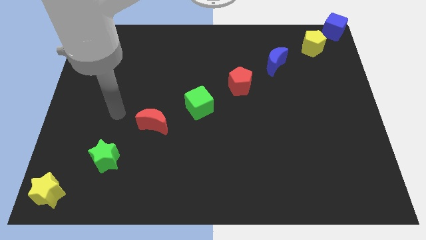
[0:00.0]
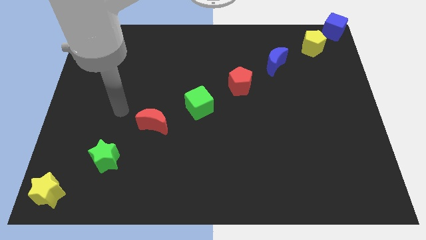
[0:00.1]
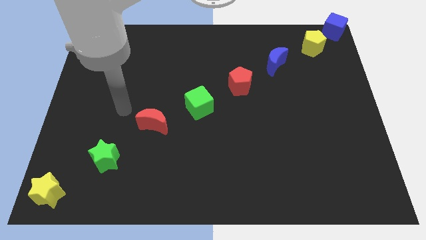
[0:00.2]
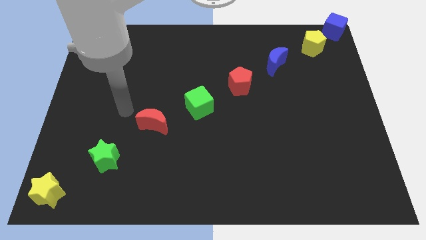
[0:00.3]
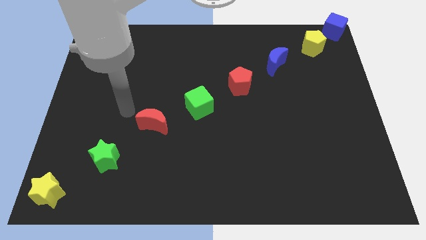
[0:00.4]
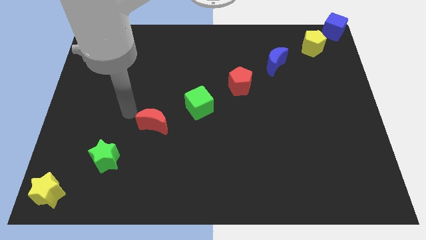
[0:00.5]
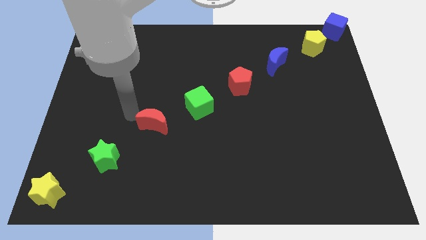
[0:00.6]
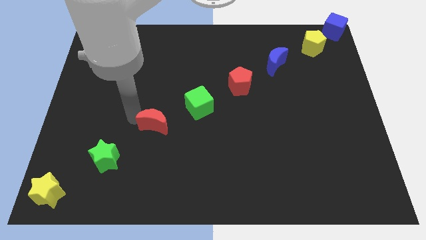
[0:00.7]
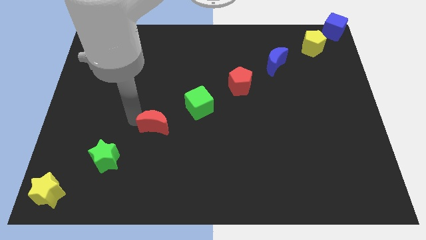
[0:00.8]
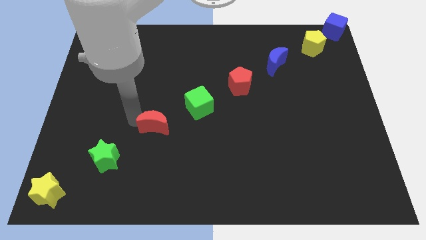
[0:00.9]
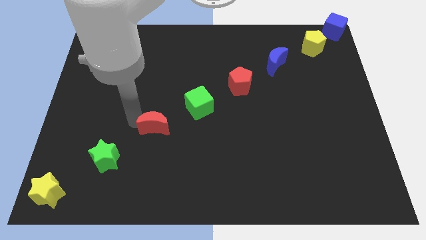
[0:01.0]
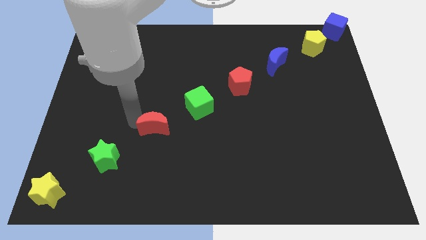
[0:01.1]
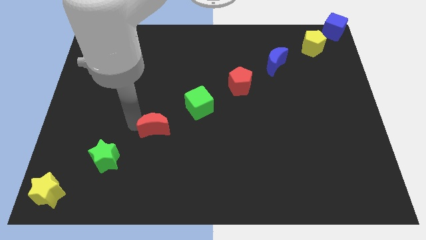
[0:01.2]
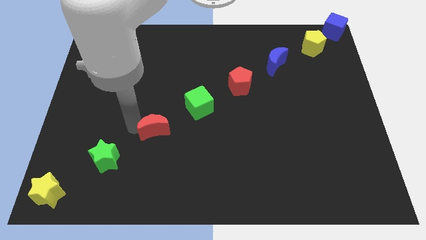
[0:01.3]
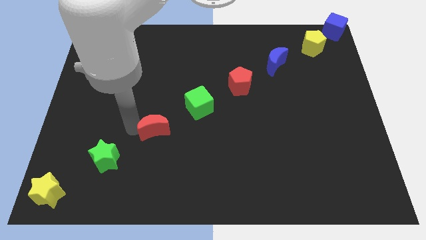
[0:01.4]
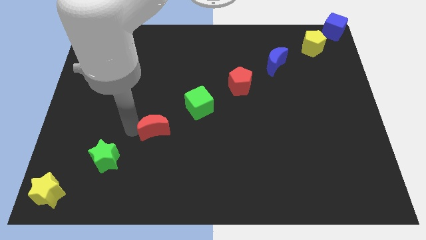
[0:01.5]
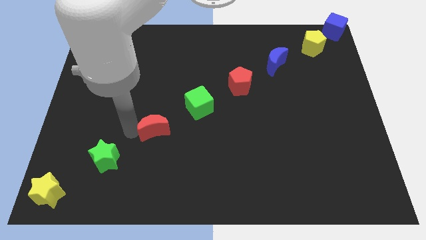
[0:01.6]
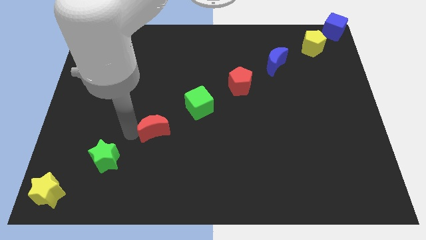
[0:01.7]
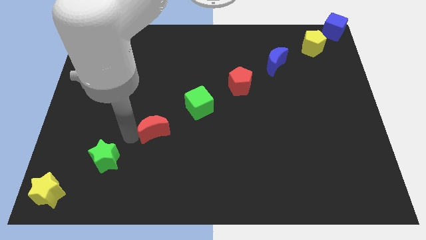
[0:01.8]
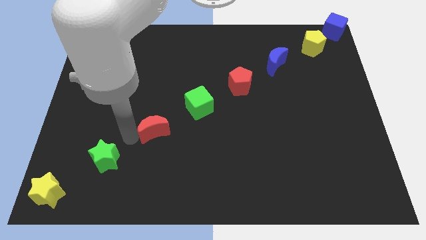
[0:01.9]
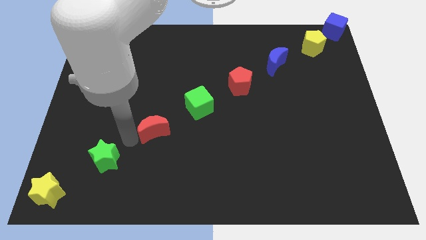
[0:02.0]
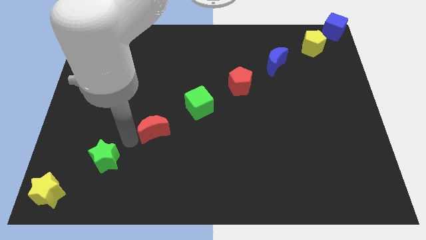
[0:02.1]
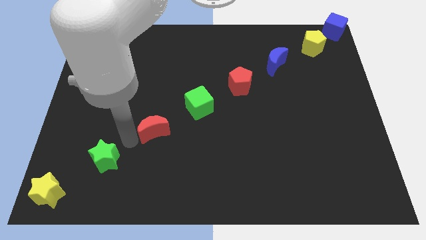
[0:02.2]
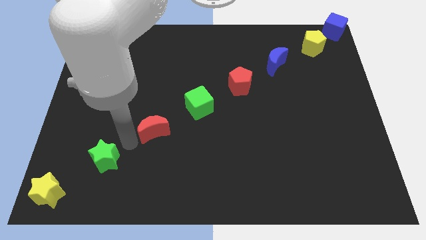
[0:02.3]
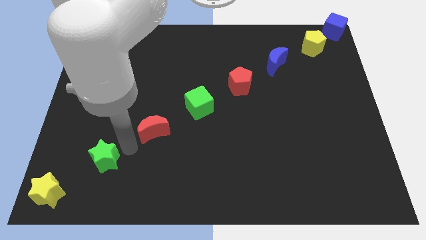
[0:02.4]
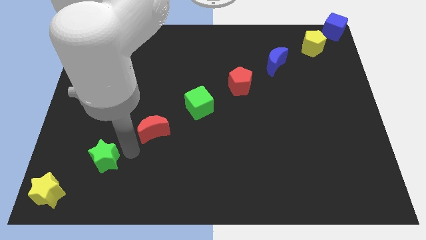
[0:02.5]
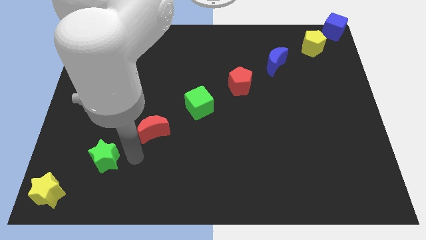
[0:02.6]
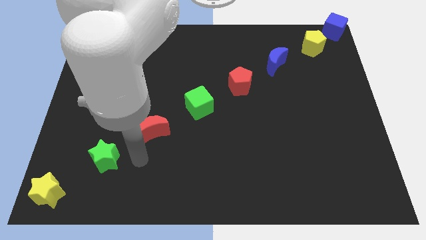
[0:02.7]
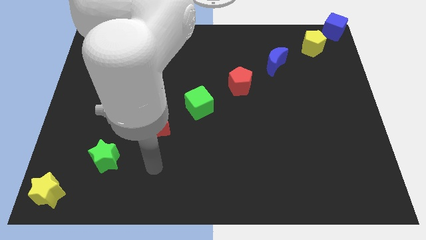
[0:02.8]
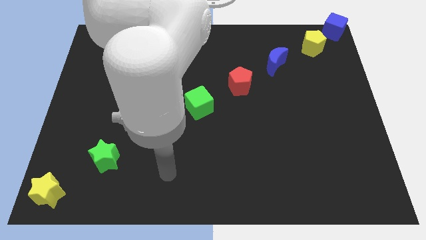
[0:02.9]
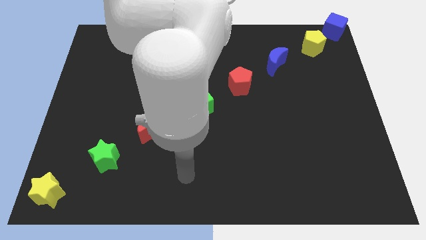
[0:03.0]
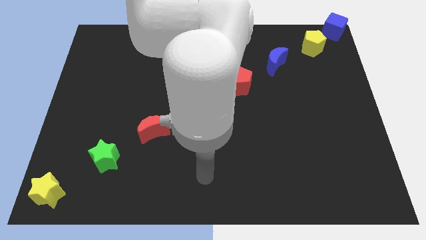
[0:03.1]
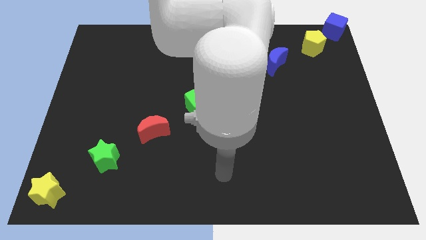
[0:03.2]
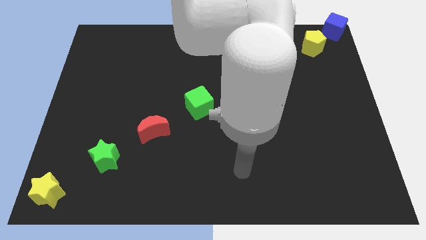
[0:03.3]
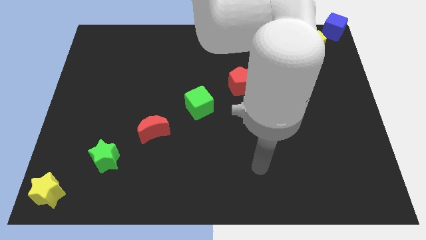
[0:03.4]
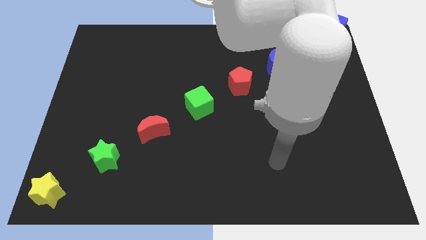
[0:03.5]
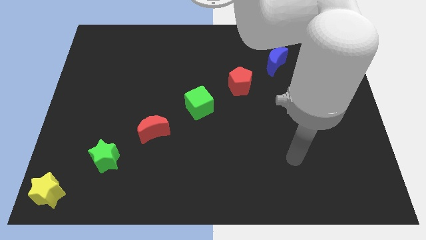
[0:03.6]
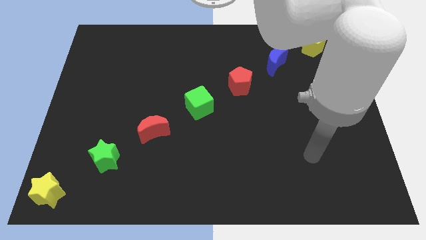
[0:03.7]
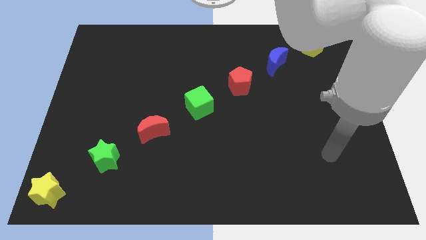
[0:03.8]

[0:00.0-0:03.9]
move your arm towards the bottom right of the board

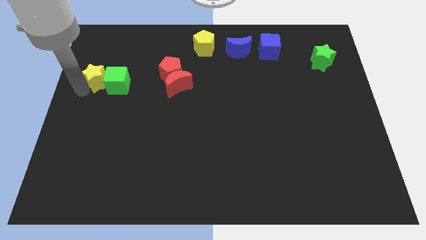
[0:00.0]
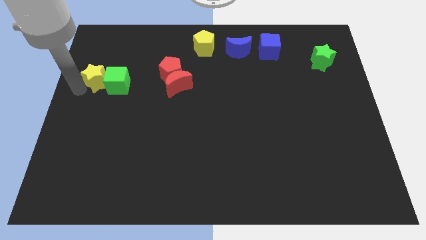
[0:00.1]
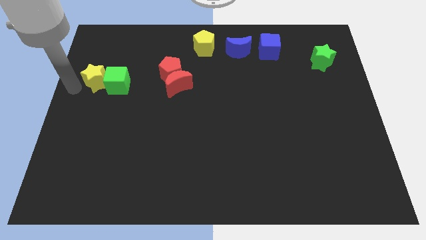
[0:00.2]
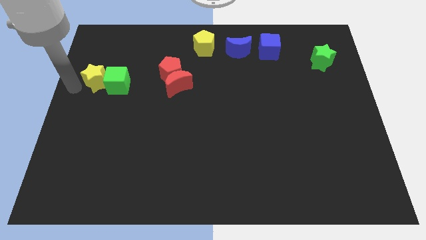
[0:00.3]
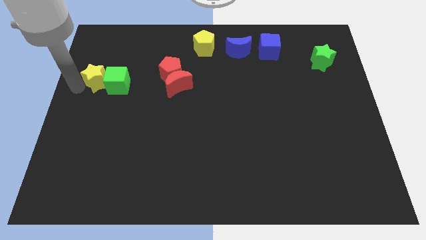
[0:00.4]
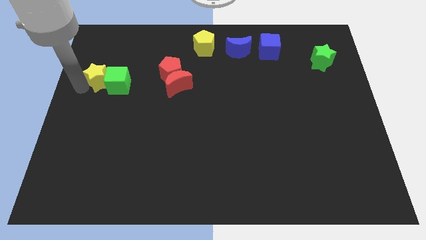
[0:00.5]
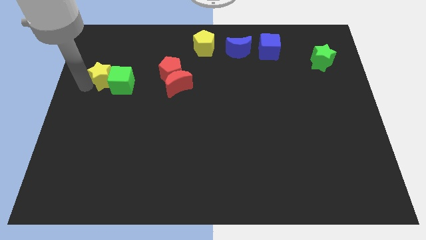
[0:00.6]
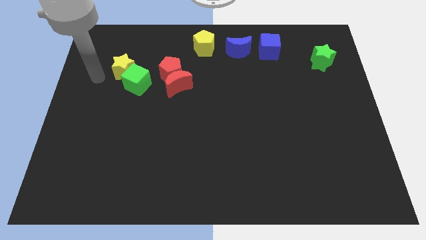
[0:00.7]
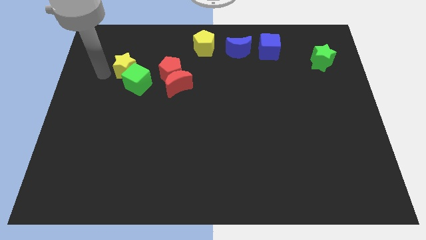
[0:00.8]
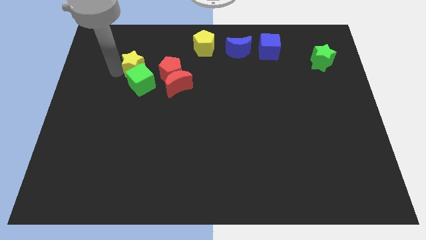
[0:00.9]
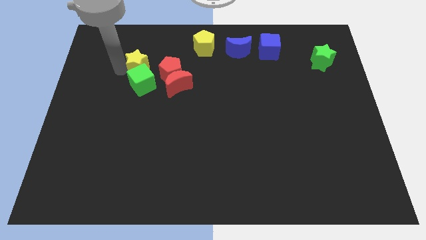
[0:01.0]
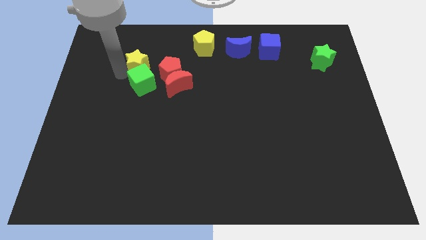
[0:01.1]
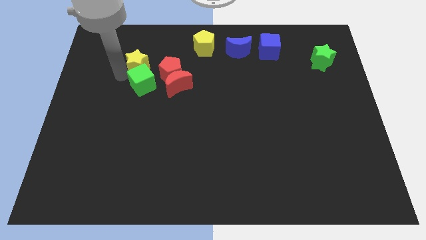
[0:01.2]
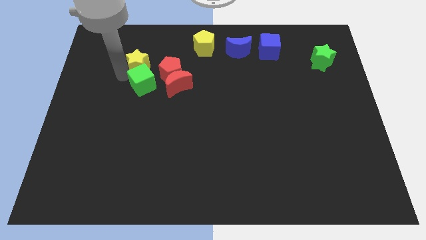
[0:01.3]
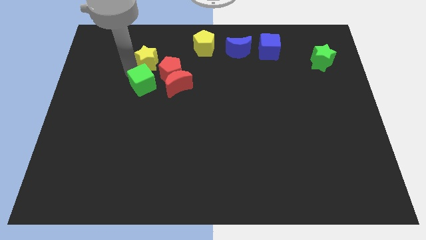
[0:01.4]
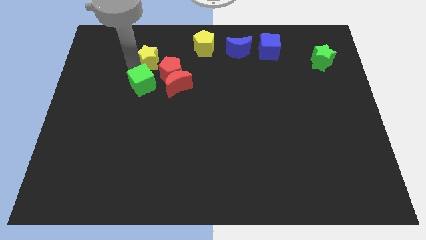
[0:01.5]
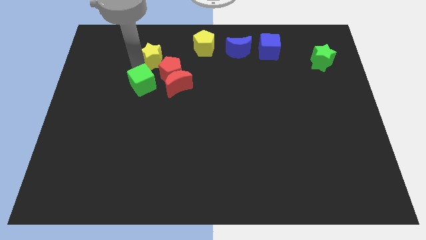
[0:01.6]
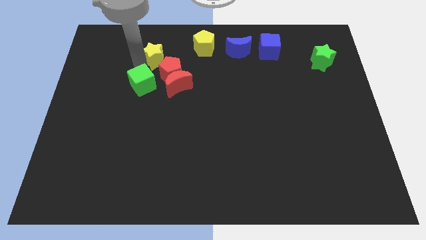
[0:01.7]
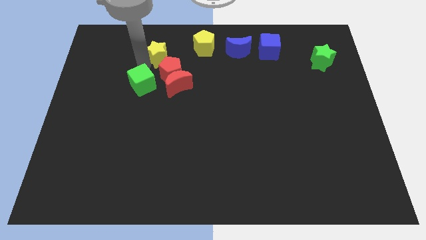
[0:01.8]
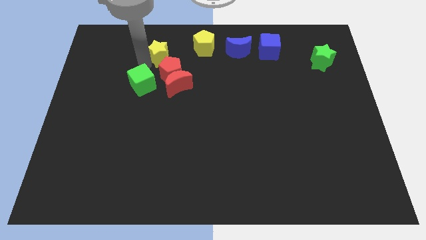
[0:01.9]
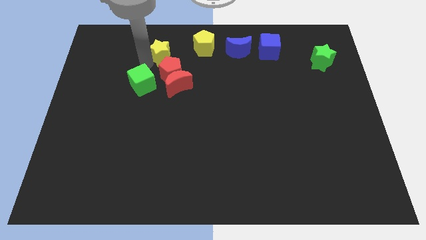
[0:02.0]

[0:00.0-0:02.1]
separate the yellow star from the green cube

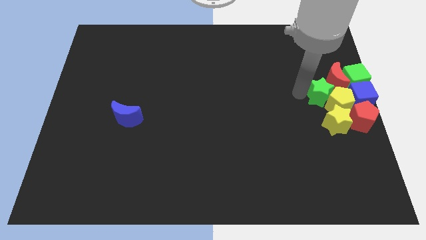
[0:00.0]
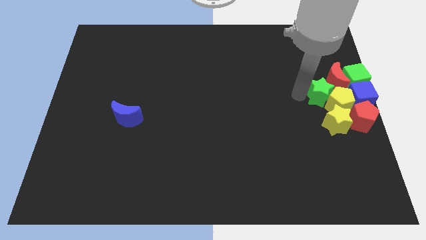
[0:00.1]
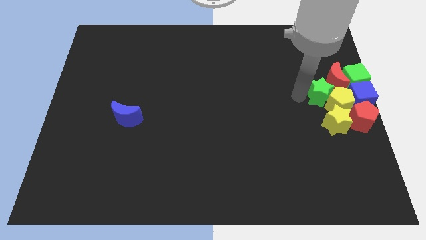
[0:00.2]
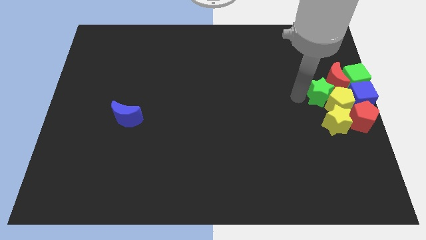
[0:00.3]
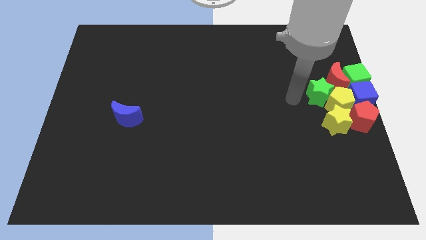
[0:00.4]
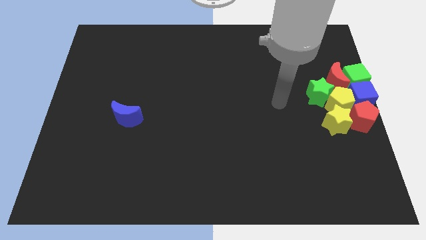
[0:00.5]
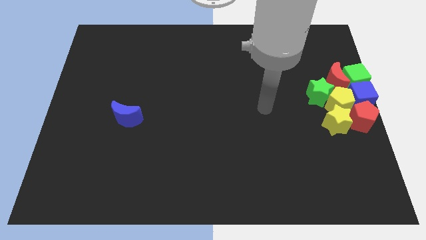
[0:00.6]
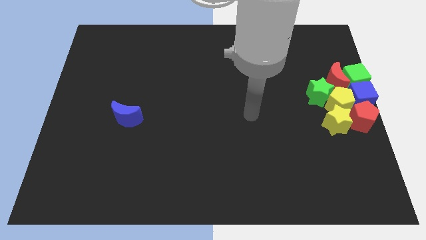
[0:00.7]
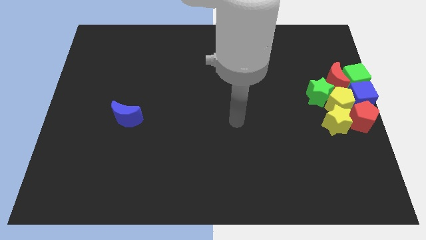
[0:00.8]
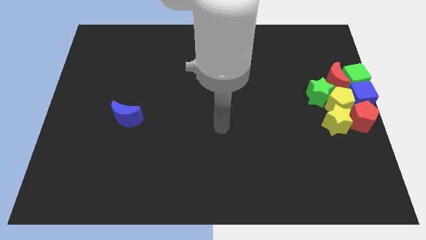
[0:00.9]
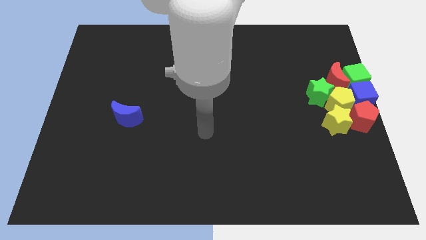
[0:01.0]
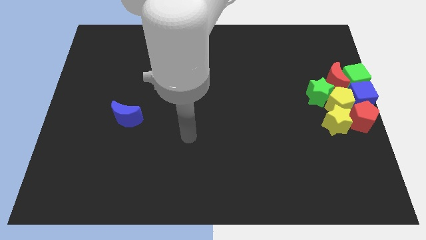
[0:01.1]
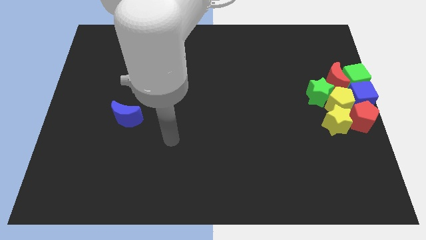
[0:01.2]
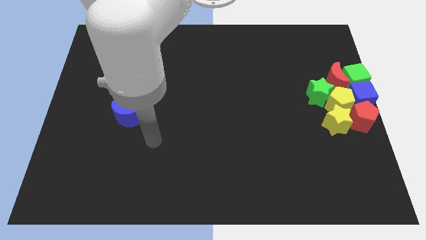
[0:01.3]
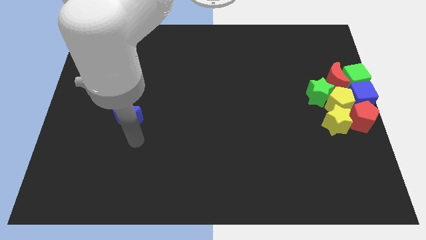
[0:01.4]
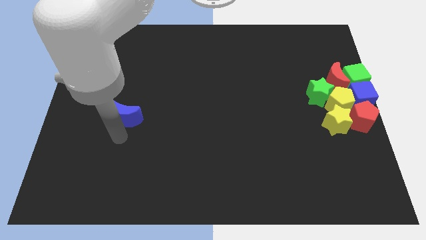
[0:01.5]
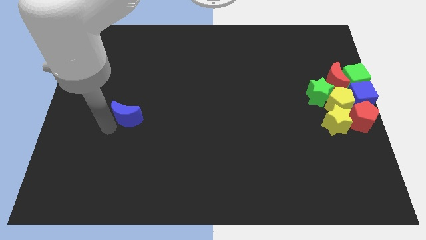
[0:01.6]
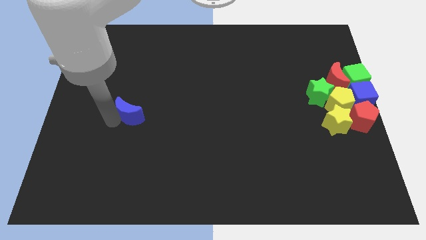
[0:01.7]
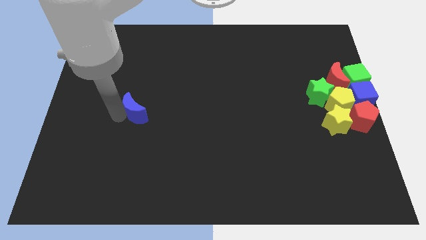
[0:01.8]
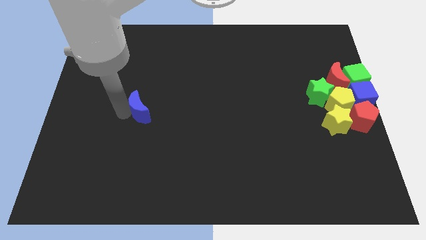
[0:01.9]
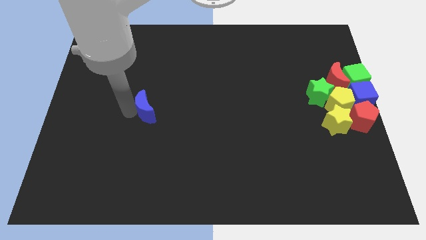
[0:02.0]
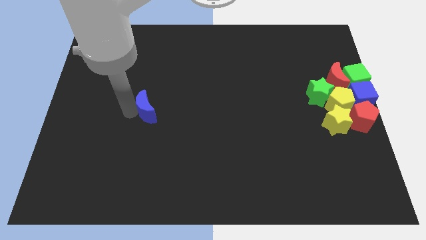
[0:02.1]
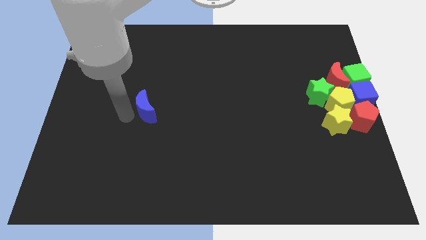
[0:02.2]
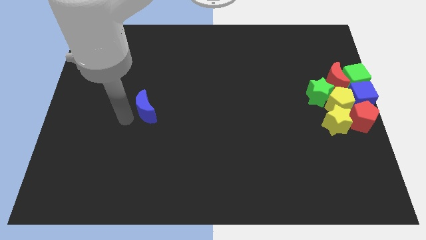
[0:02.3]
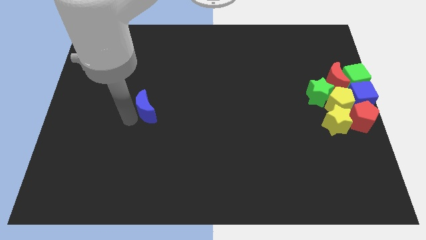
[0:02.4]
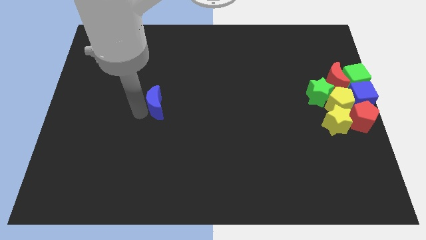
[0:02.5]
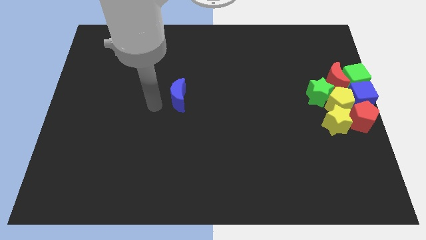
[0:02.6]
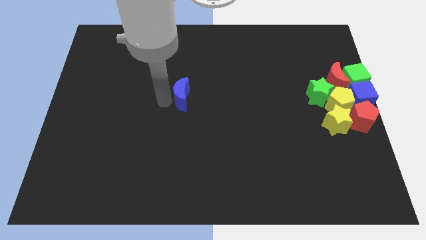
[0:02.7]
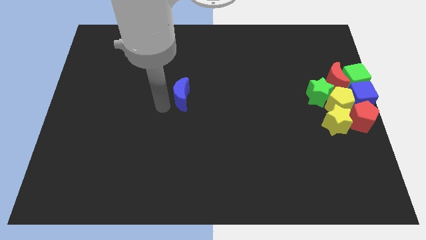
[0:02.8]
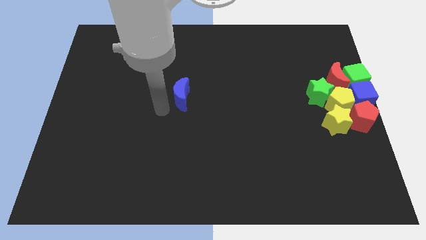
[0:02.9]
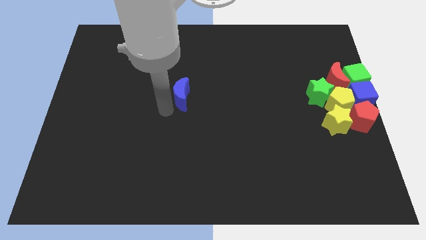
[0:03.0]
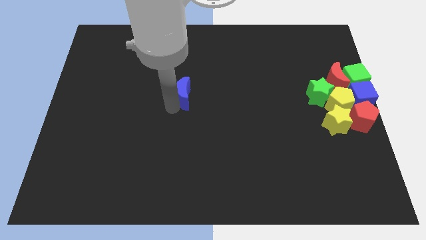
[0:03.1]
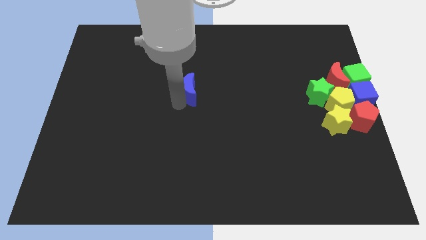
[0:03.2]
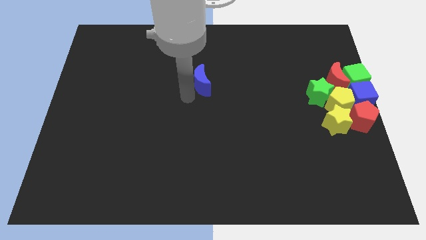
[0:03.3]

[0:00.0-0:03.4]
move the blue moon to the center of the board
